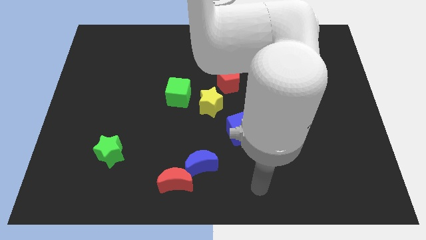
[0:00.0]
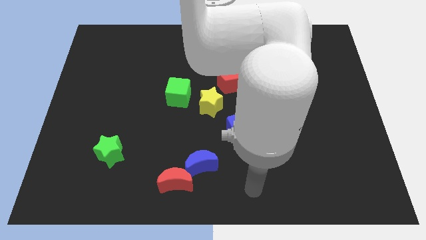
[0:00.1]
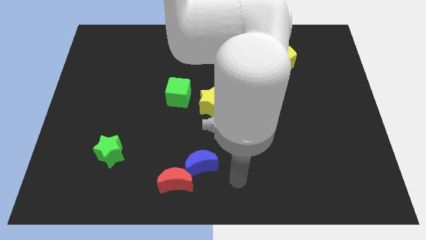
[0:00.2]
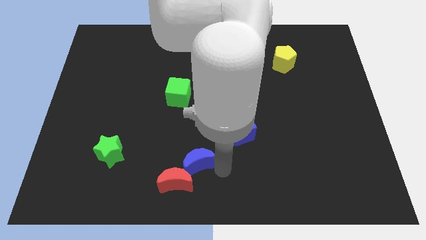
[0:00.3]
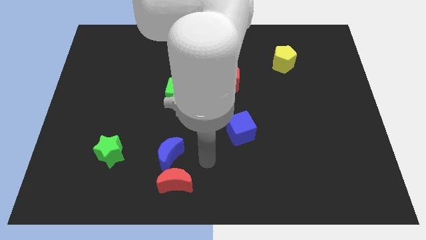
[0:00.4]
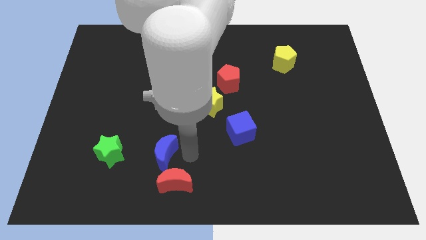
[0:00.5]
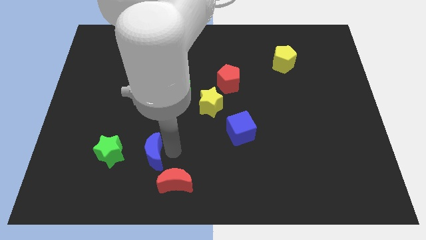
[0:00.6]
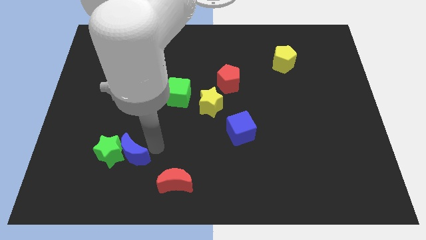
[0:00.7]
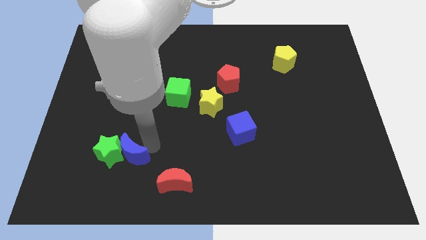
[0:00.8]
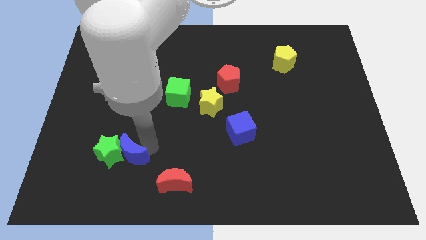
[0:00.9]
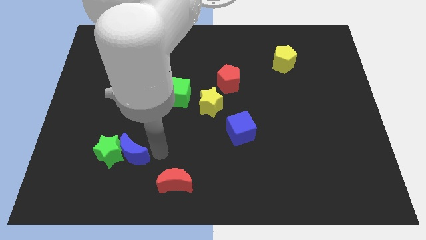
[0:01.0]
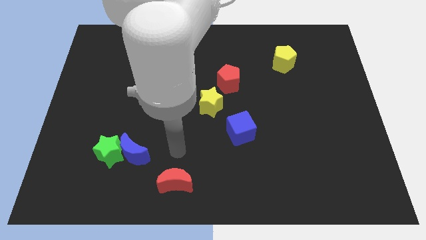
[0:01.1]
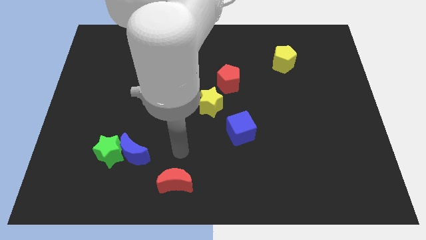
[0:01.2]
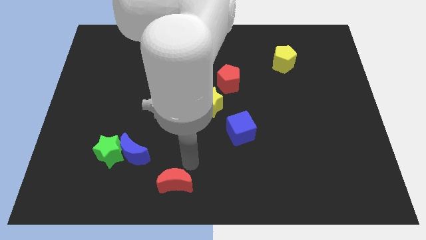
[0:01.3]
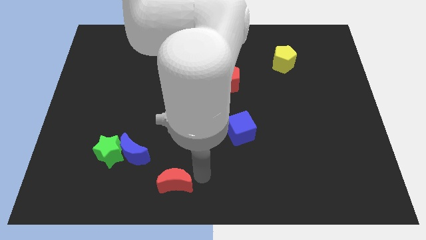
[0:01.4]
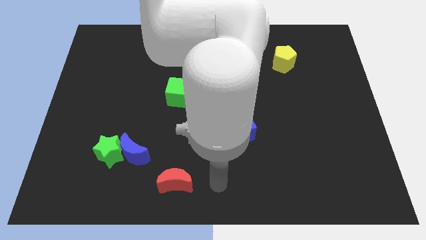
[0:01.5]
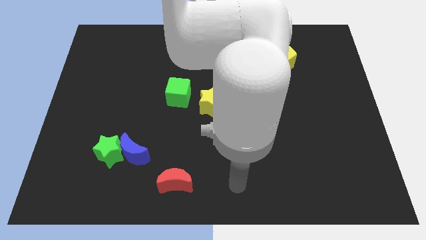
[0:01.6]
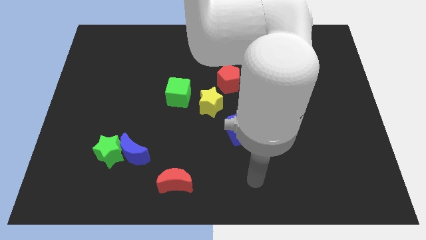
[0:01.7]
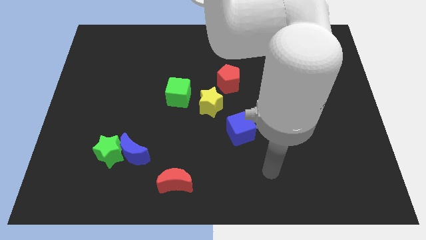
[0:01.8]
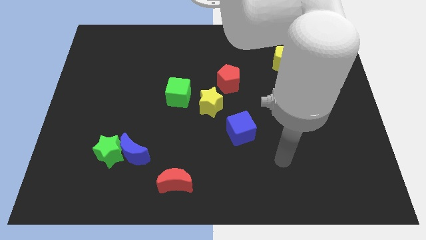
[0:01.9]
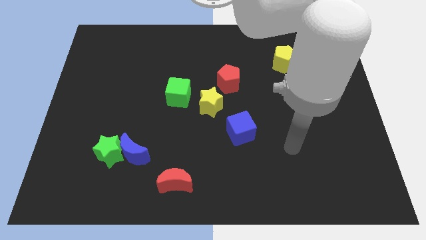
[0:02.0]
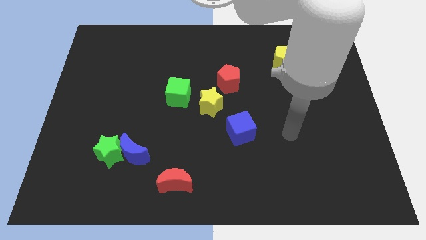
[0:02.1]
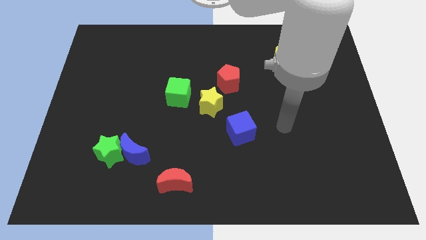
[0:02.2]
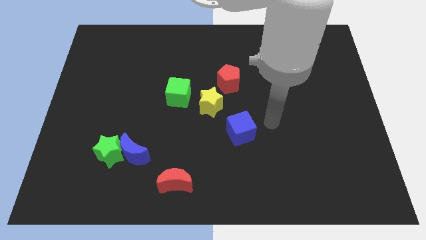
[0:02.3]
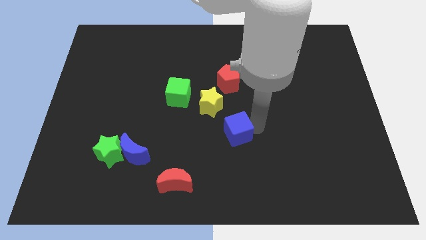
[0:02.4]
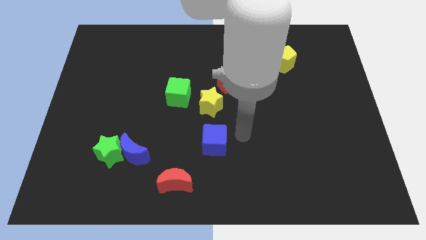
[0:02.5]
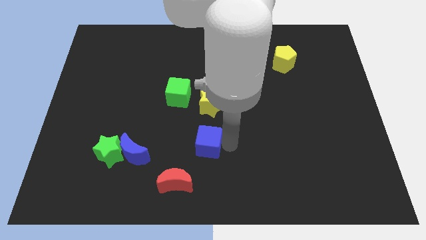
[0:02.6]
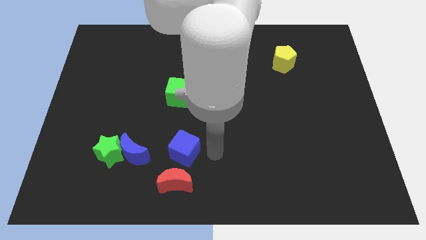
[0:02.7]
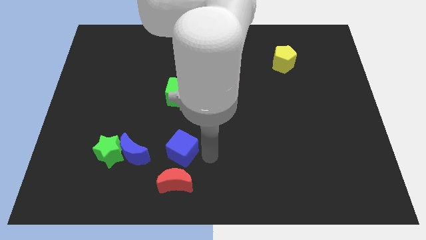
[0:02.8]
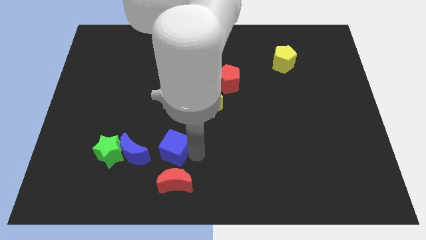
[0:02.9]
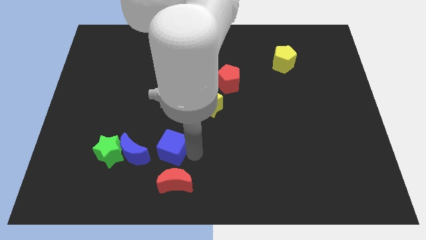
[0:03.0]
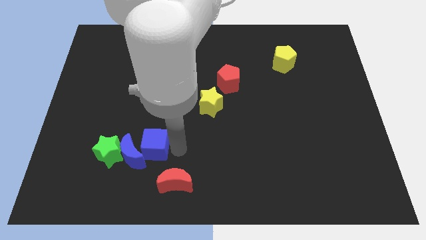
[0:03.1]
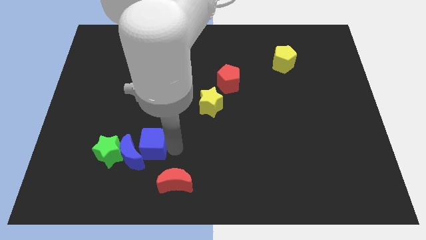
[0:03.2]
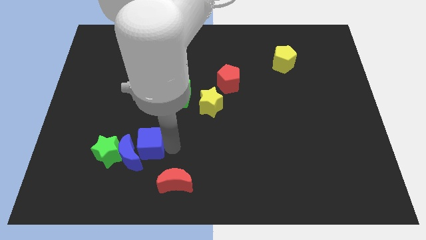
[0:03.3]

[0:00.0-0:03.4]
move blue blocks to the right of green star

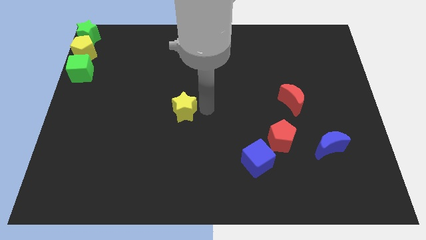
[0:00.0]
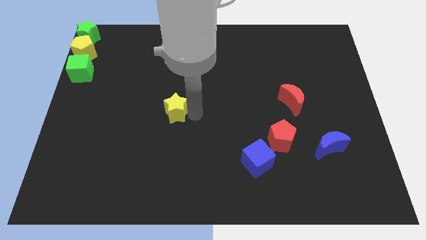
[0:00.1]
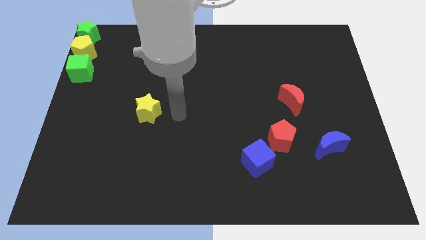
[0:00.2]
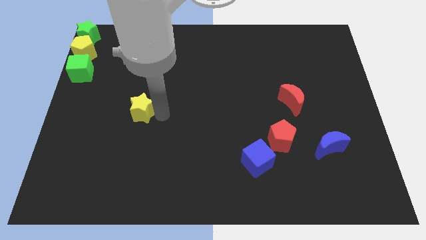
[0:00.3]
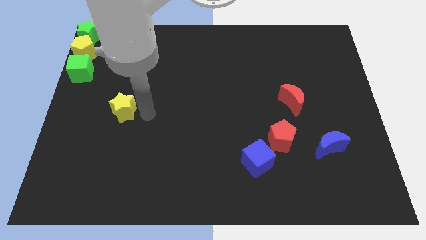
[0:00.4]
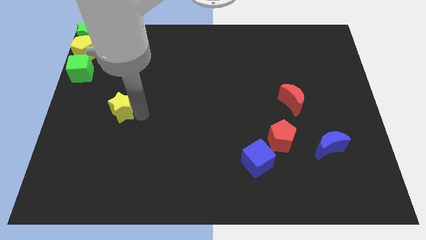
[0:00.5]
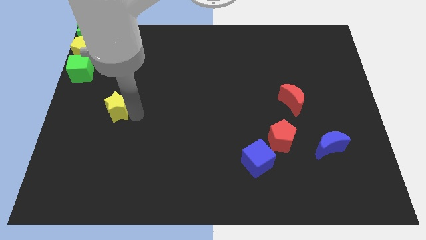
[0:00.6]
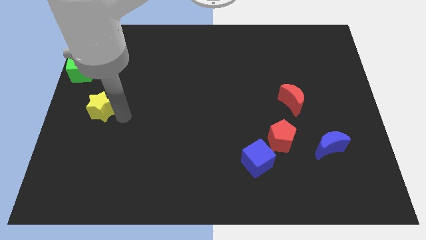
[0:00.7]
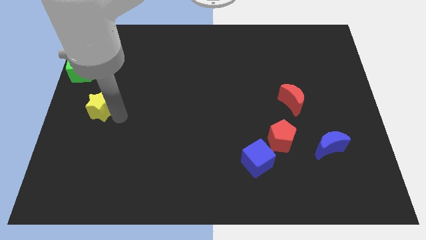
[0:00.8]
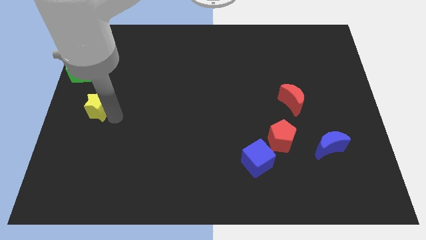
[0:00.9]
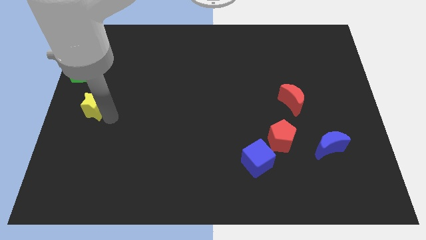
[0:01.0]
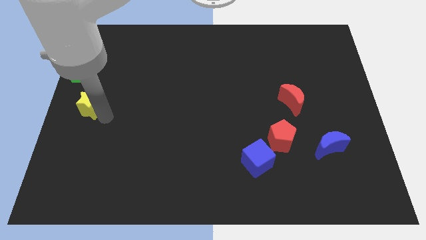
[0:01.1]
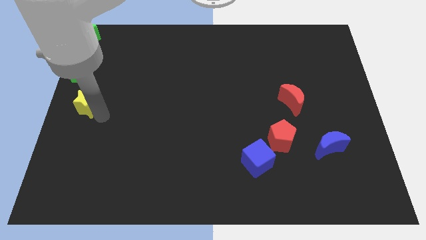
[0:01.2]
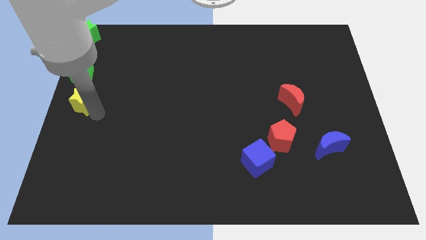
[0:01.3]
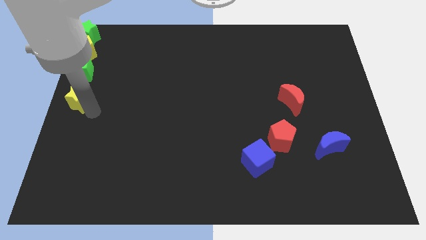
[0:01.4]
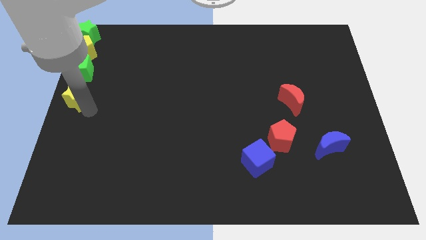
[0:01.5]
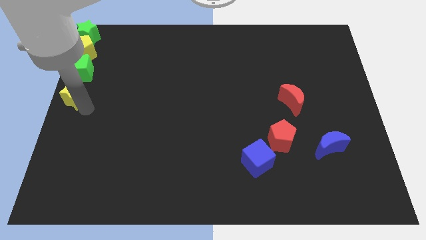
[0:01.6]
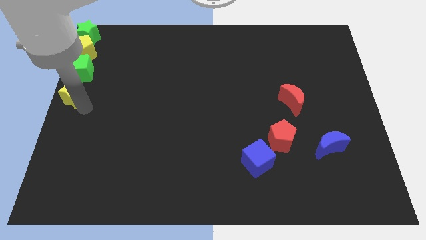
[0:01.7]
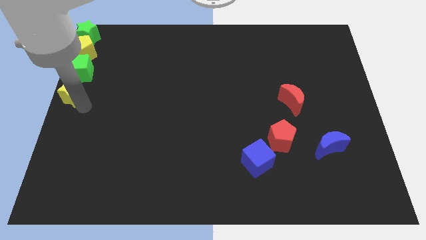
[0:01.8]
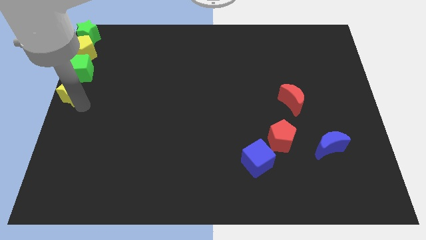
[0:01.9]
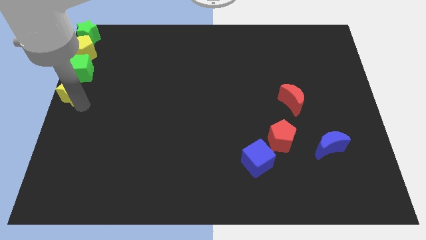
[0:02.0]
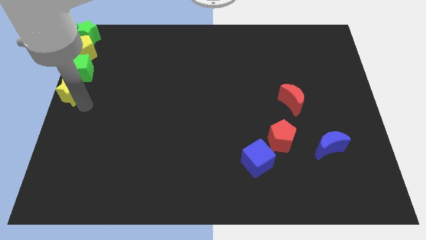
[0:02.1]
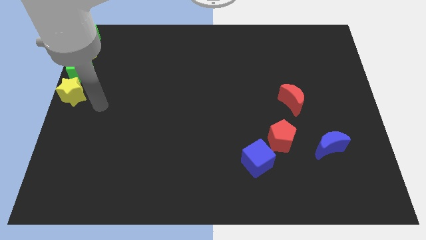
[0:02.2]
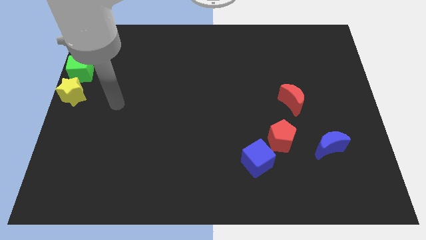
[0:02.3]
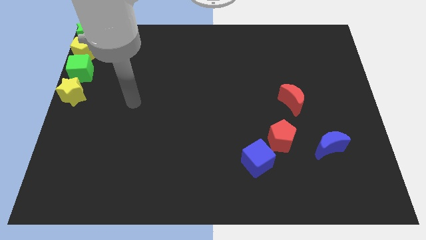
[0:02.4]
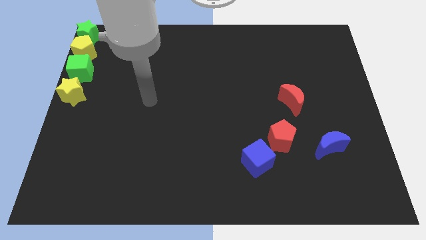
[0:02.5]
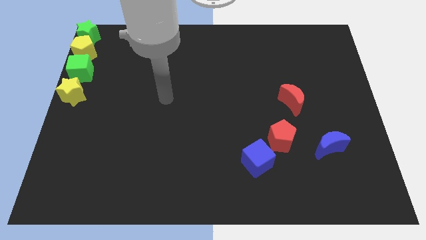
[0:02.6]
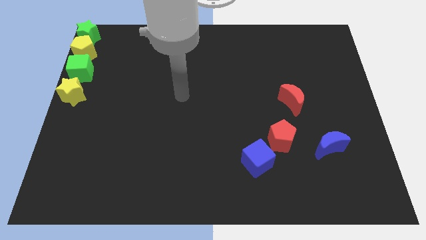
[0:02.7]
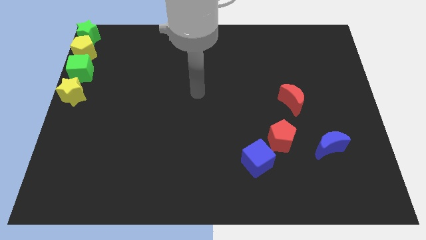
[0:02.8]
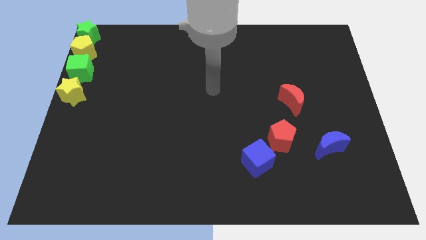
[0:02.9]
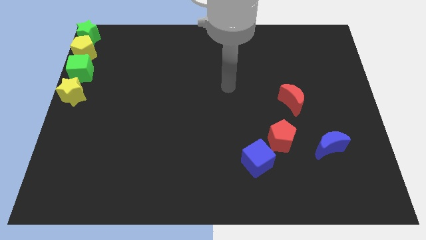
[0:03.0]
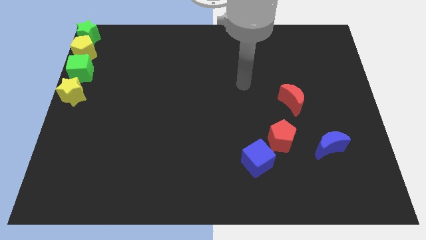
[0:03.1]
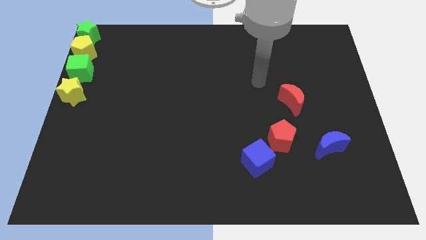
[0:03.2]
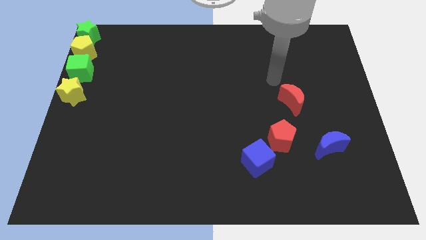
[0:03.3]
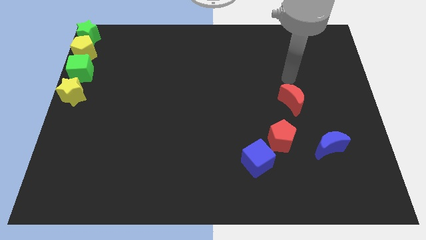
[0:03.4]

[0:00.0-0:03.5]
place the yellow star below the green cube

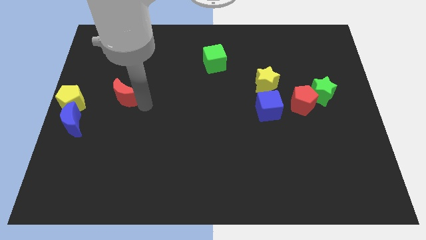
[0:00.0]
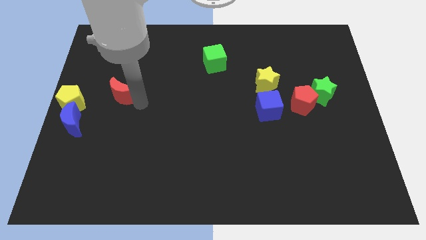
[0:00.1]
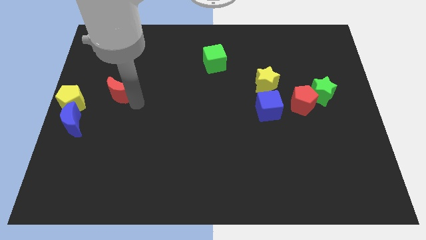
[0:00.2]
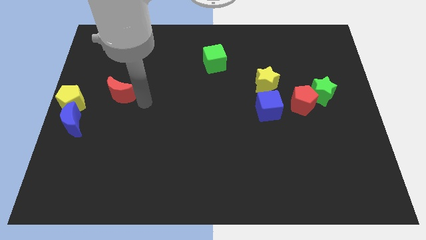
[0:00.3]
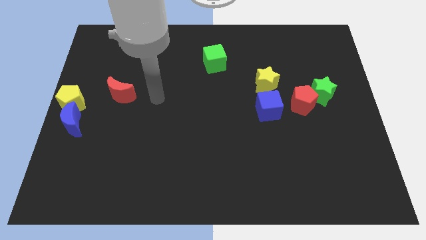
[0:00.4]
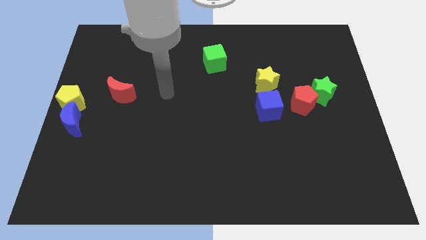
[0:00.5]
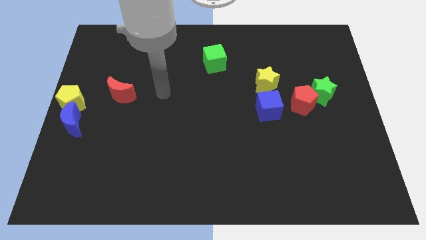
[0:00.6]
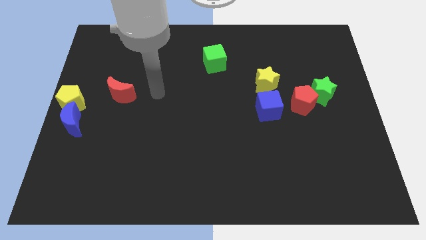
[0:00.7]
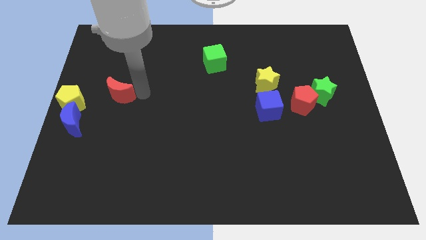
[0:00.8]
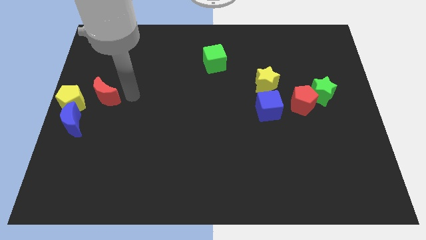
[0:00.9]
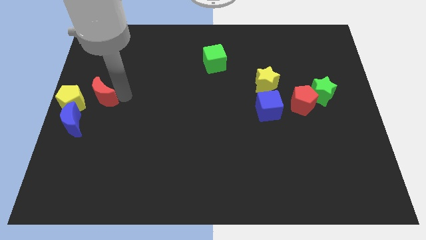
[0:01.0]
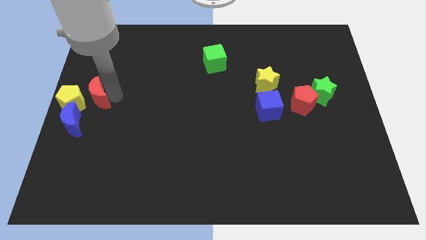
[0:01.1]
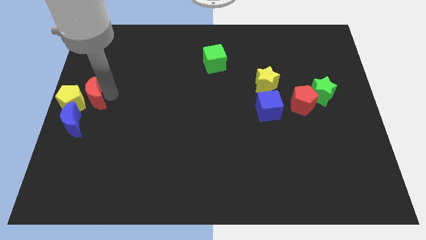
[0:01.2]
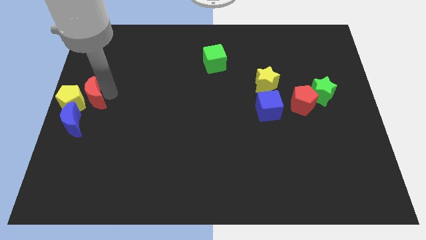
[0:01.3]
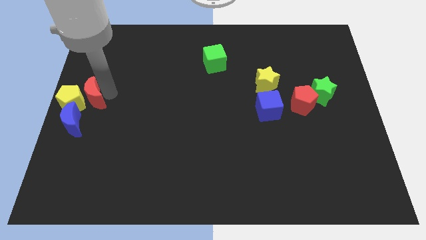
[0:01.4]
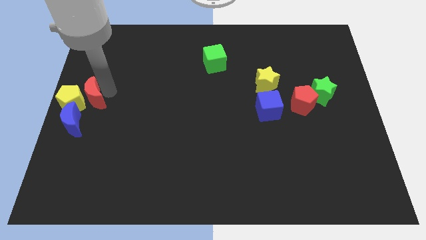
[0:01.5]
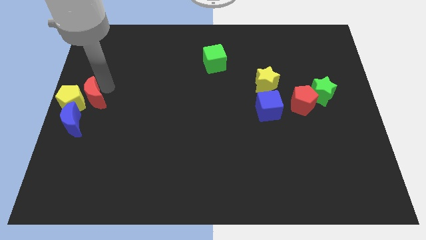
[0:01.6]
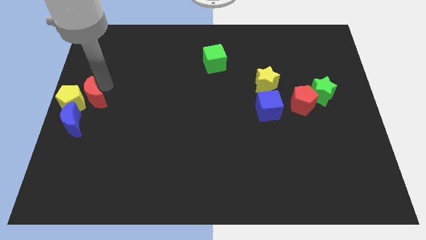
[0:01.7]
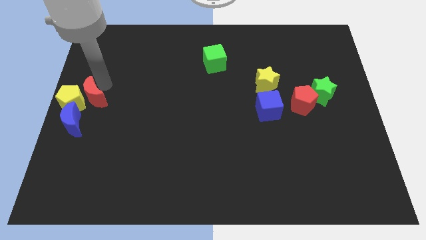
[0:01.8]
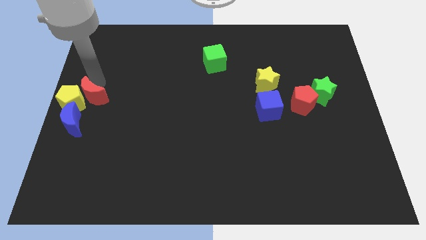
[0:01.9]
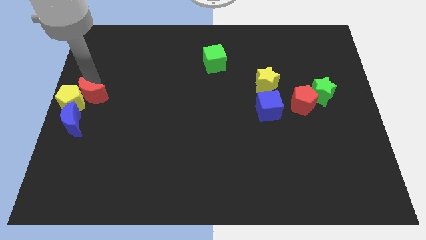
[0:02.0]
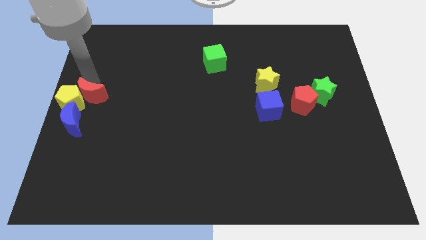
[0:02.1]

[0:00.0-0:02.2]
push the red crescent close to the yellow pentagon
